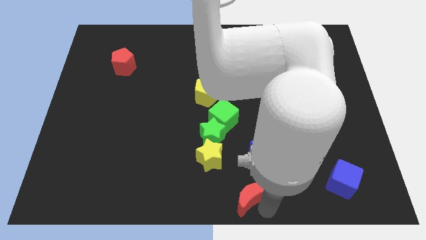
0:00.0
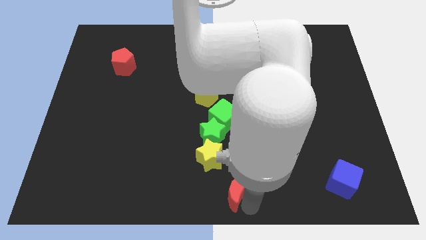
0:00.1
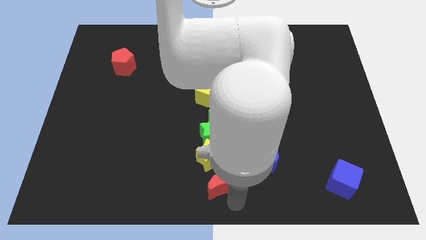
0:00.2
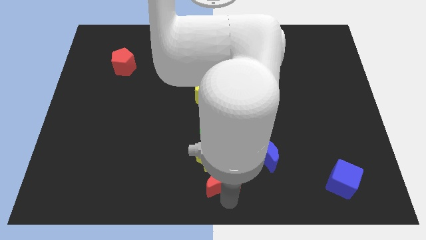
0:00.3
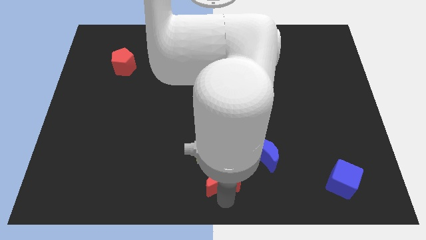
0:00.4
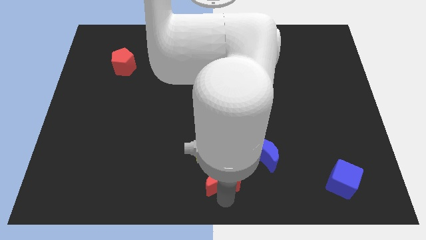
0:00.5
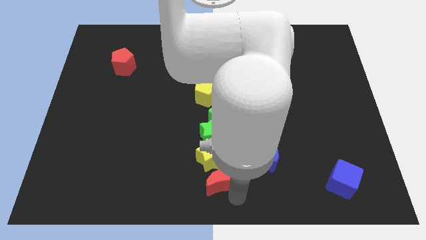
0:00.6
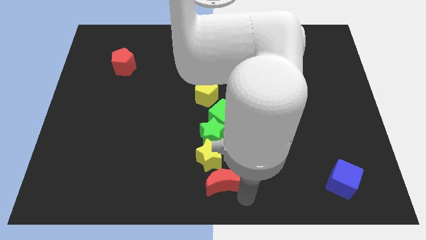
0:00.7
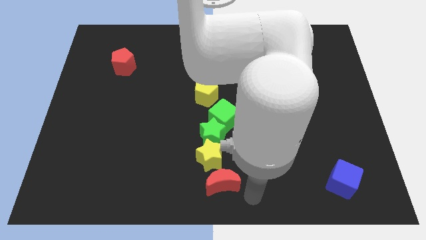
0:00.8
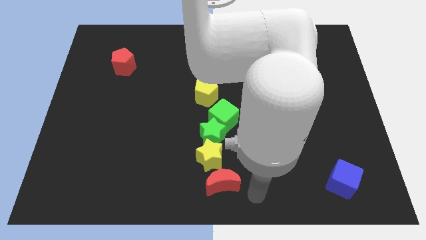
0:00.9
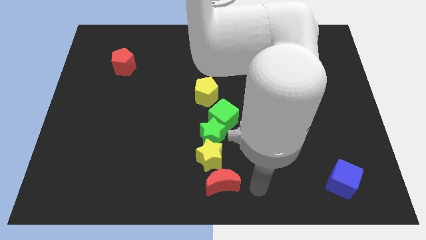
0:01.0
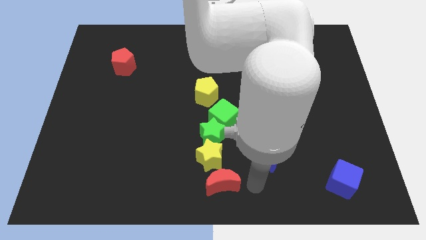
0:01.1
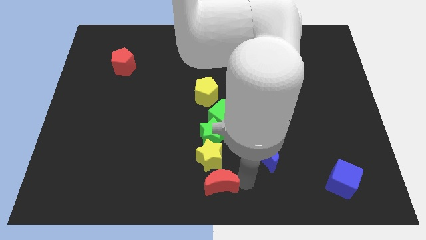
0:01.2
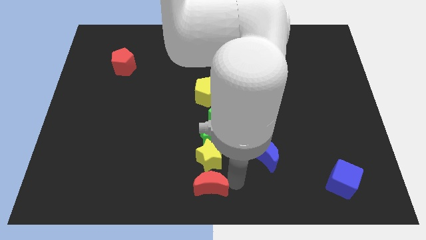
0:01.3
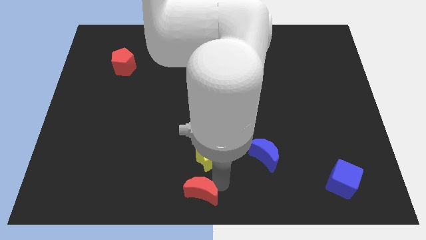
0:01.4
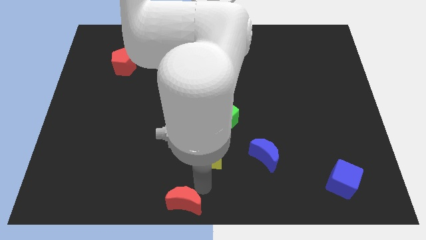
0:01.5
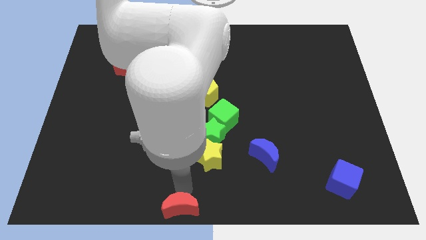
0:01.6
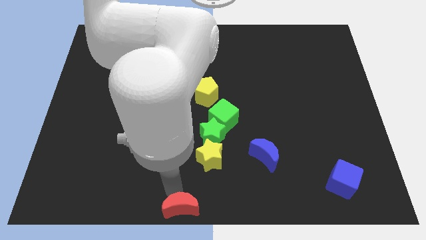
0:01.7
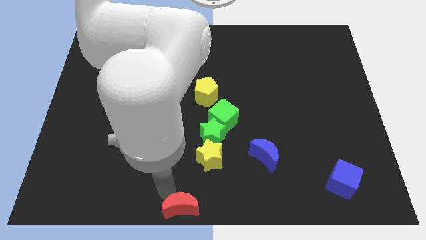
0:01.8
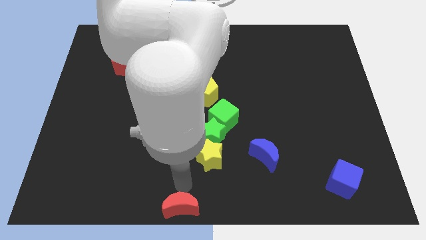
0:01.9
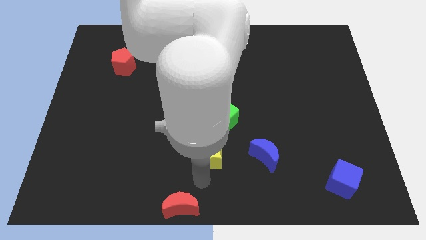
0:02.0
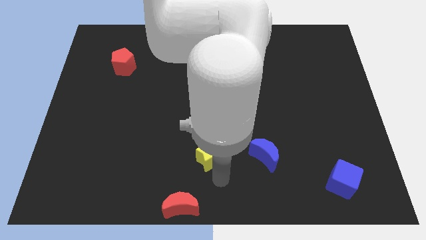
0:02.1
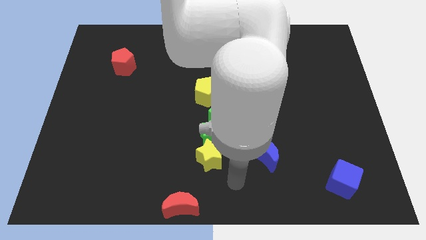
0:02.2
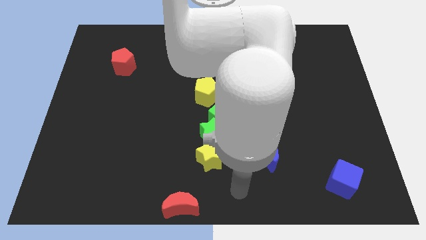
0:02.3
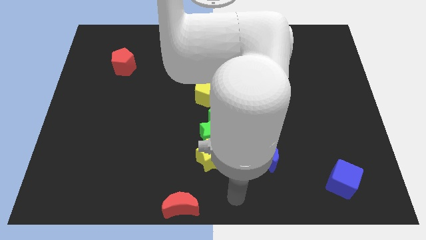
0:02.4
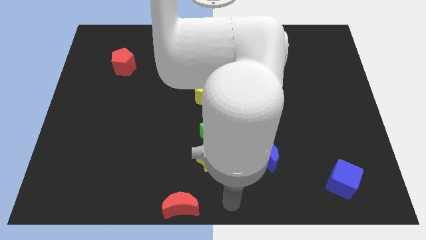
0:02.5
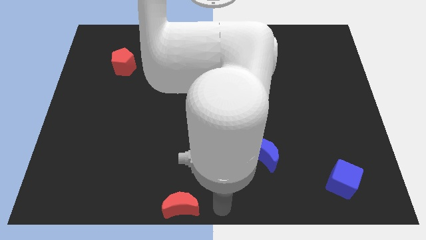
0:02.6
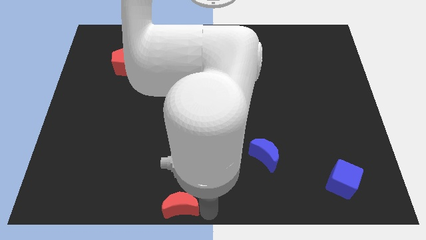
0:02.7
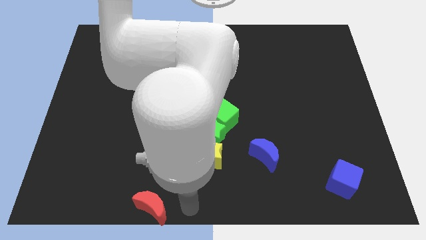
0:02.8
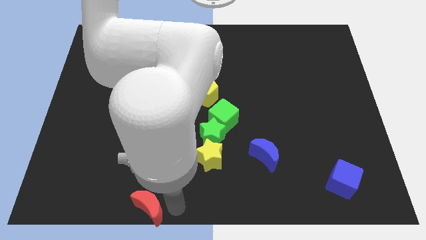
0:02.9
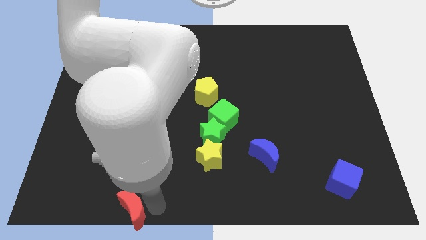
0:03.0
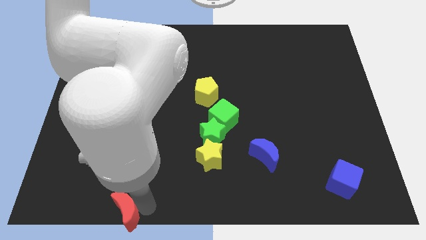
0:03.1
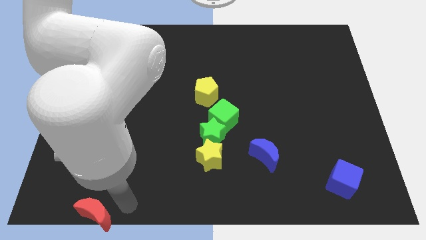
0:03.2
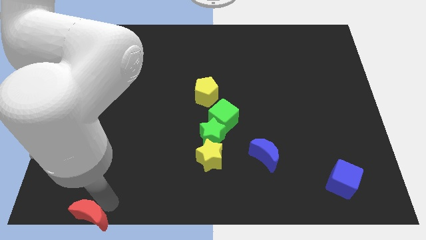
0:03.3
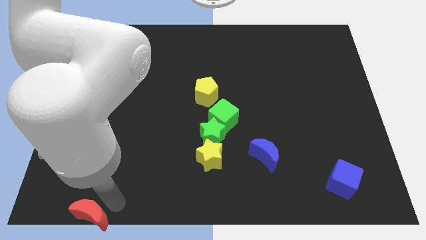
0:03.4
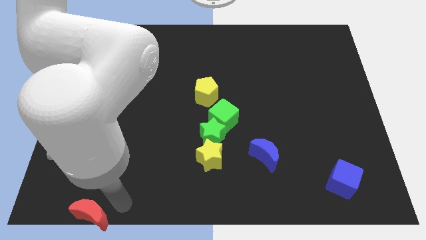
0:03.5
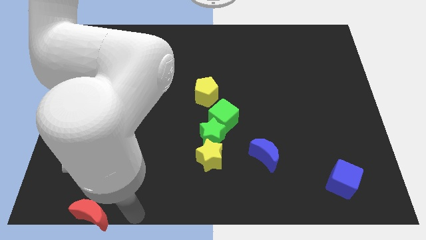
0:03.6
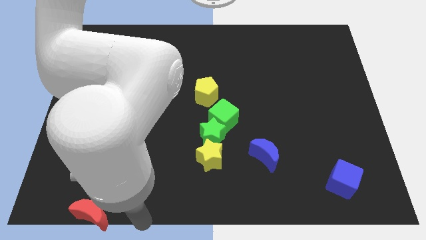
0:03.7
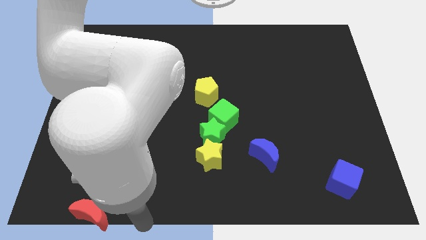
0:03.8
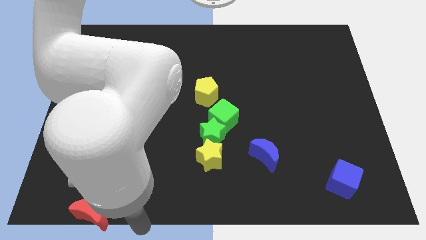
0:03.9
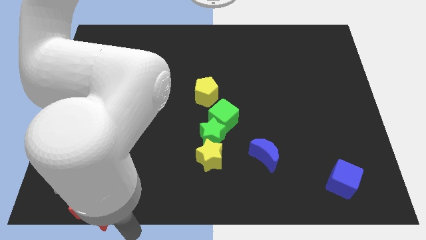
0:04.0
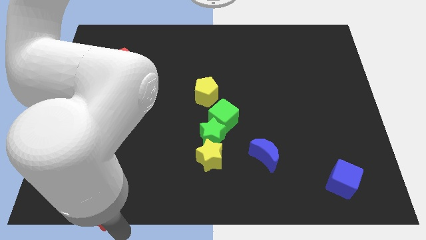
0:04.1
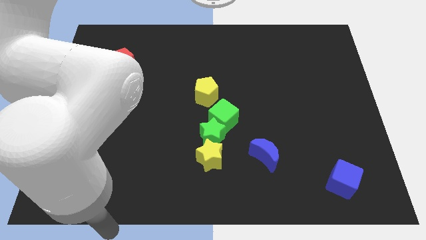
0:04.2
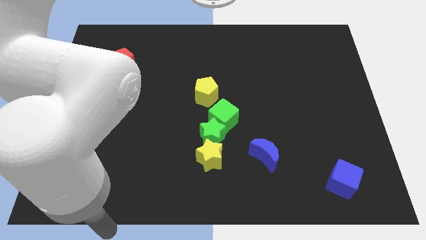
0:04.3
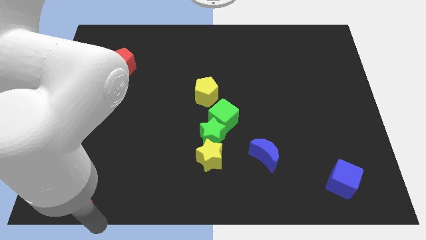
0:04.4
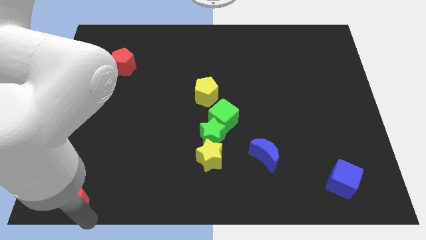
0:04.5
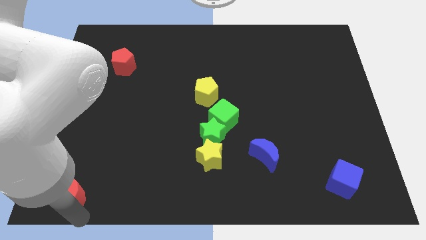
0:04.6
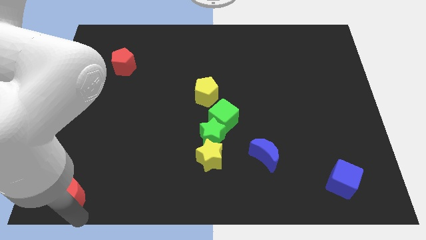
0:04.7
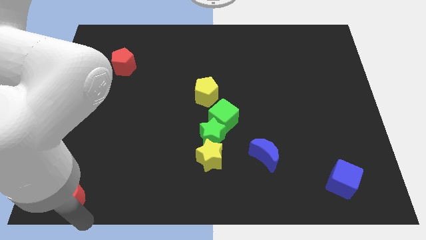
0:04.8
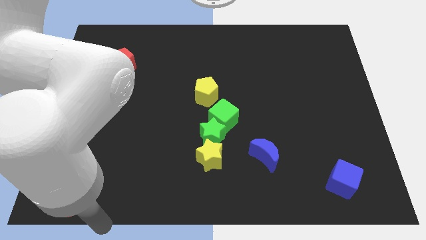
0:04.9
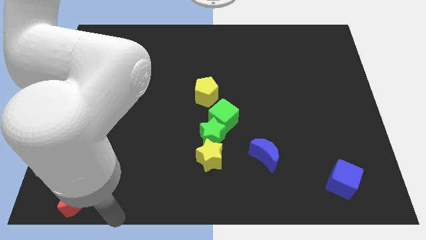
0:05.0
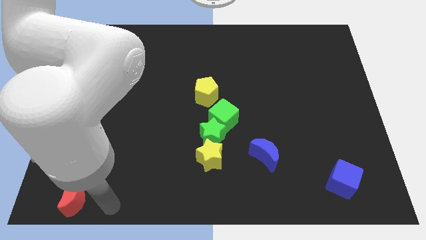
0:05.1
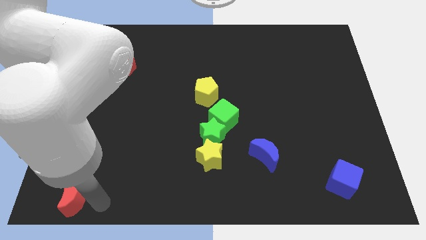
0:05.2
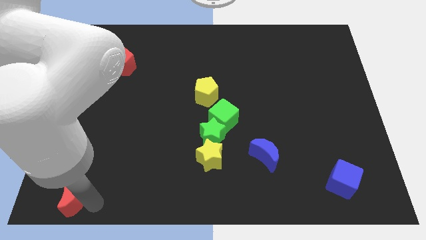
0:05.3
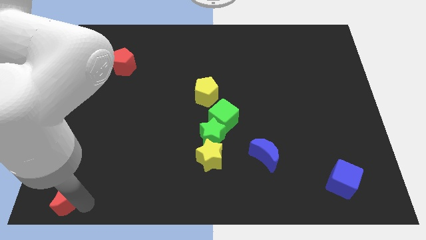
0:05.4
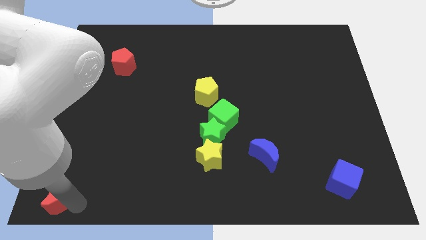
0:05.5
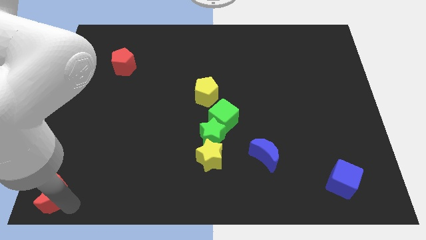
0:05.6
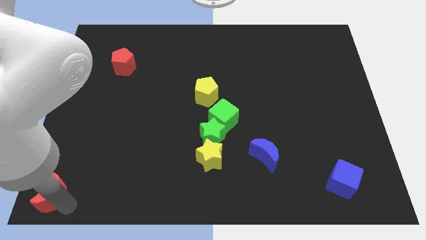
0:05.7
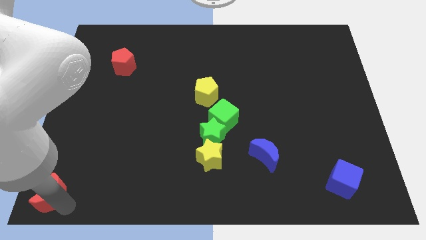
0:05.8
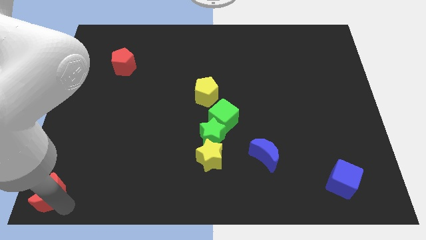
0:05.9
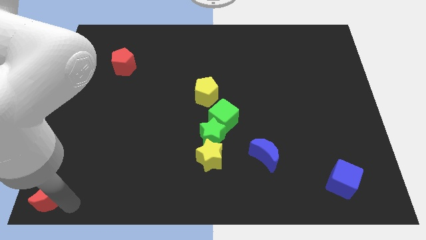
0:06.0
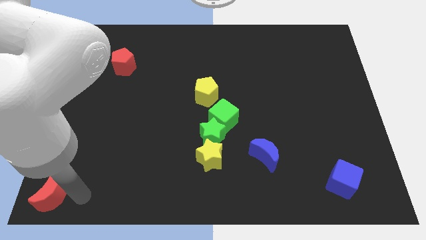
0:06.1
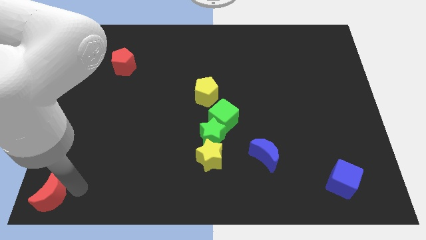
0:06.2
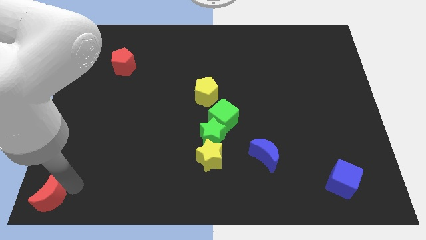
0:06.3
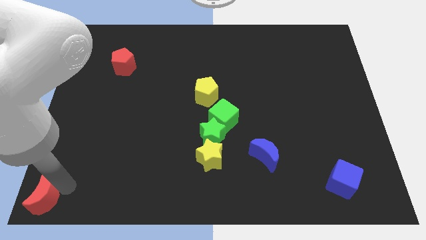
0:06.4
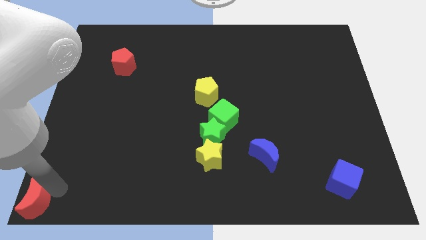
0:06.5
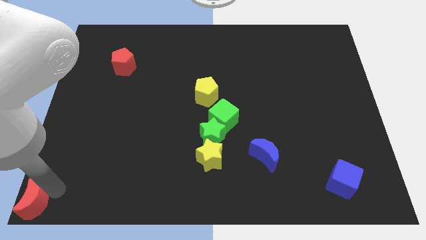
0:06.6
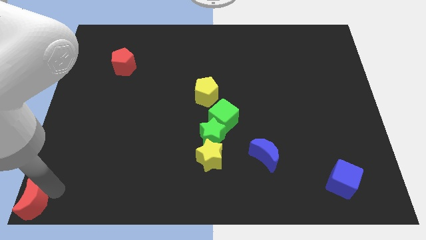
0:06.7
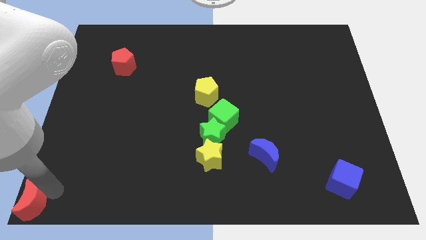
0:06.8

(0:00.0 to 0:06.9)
put the red crescent diagonally at the bottom left of the red pentagon

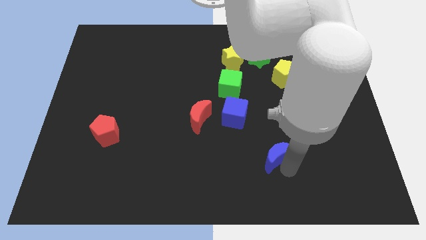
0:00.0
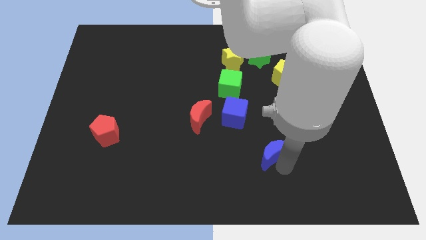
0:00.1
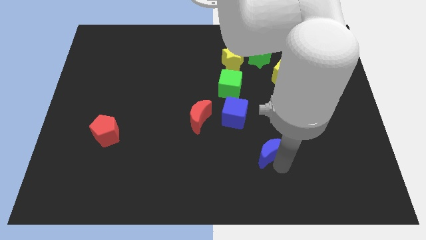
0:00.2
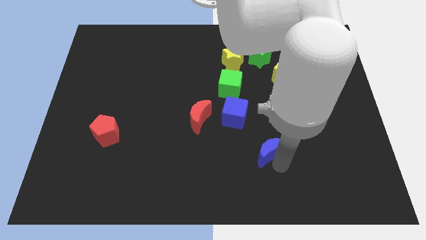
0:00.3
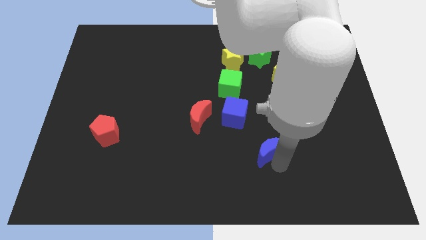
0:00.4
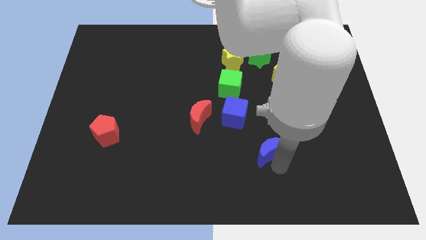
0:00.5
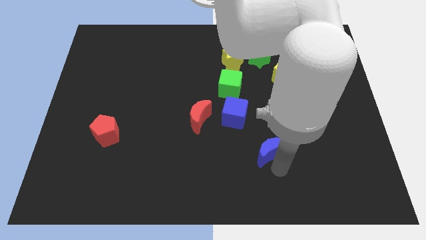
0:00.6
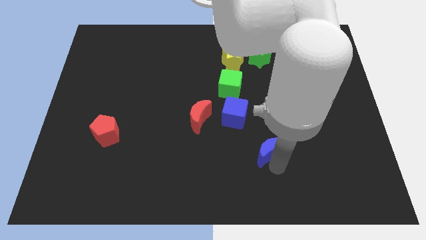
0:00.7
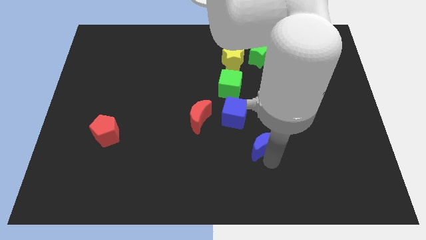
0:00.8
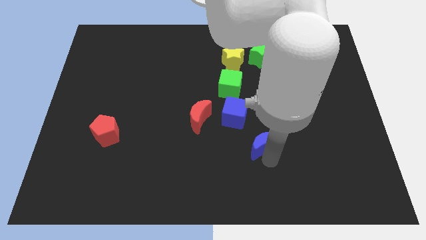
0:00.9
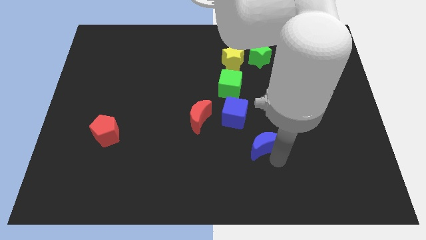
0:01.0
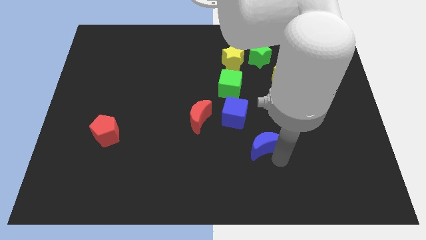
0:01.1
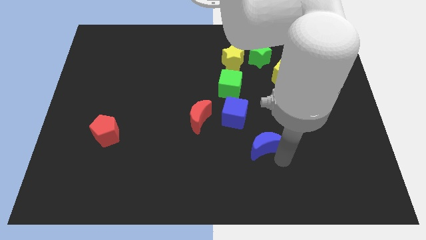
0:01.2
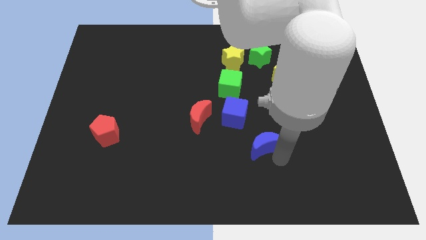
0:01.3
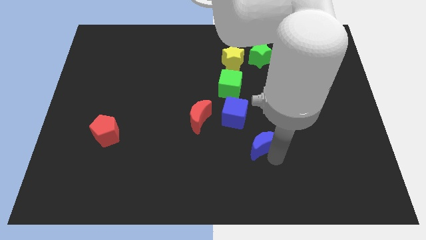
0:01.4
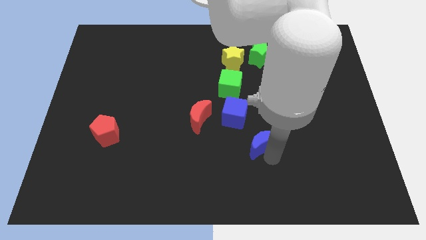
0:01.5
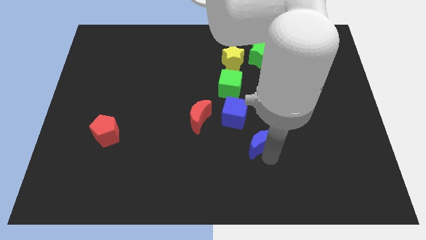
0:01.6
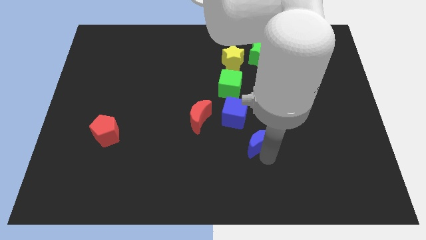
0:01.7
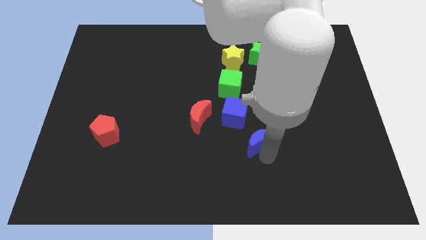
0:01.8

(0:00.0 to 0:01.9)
push the blue moon towars the blue cube

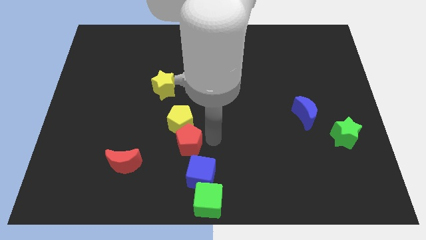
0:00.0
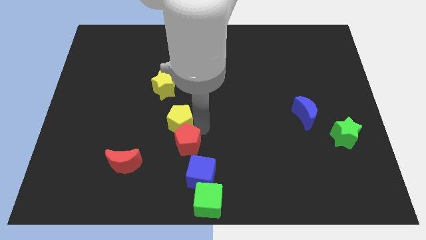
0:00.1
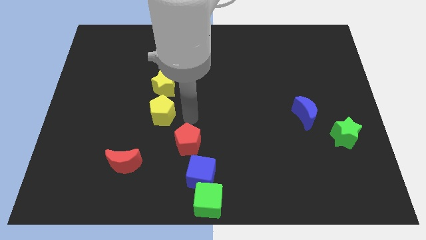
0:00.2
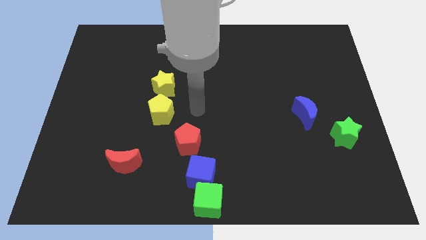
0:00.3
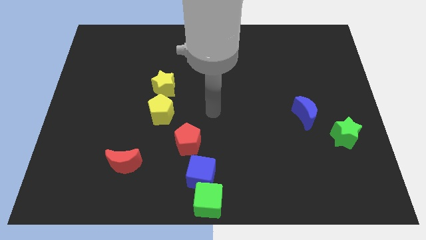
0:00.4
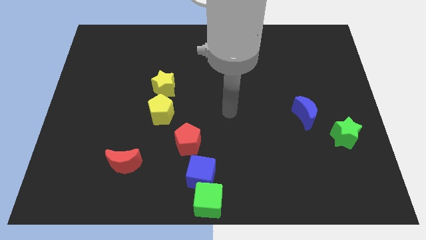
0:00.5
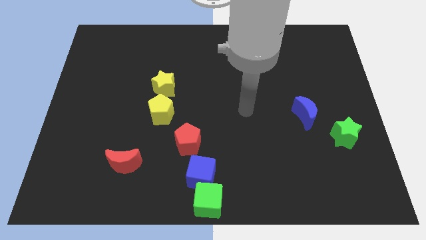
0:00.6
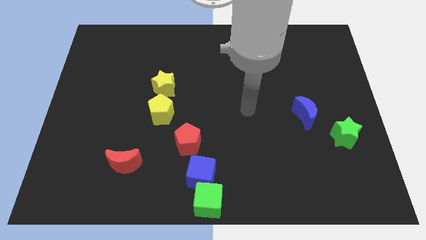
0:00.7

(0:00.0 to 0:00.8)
move the yellow pentagon below the yellow star
